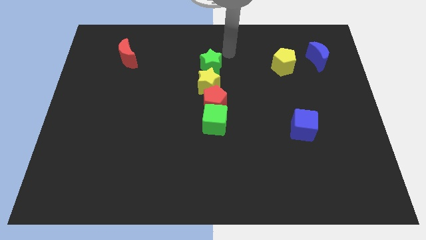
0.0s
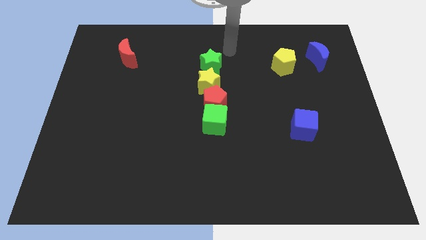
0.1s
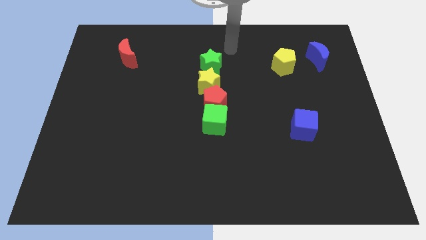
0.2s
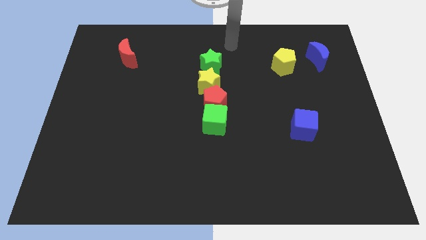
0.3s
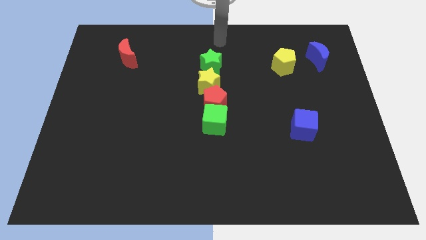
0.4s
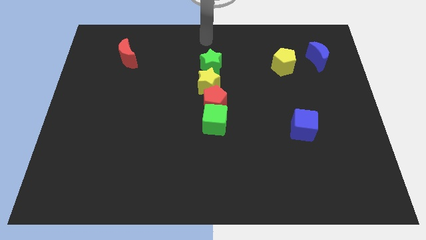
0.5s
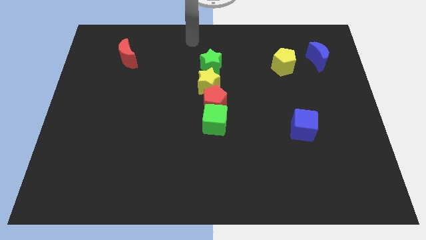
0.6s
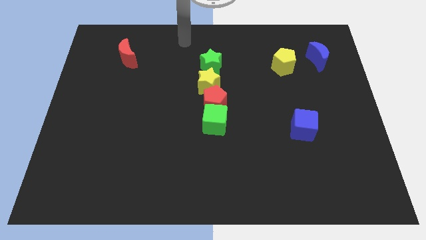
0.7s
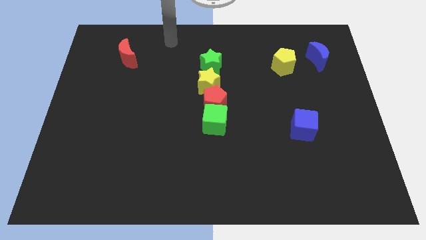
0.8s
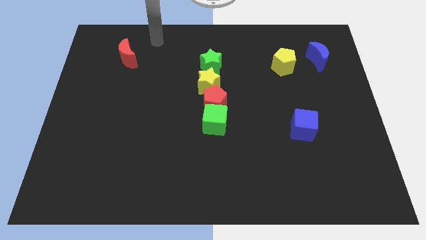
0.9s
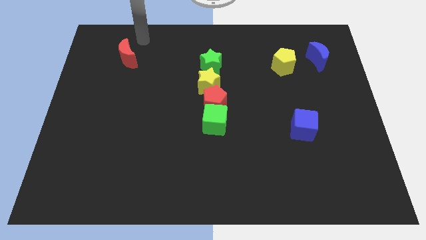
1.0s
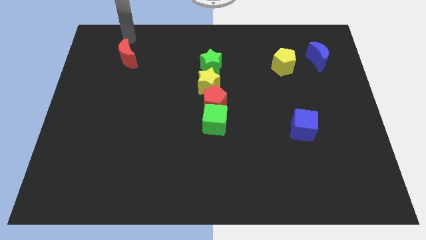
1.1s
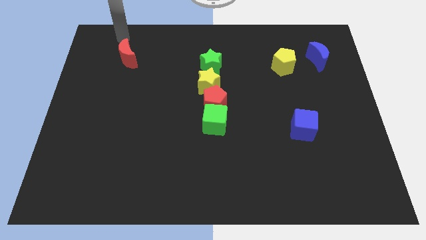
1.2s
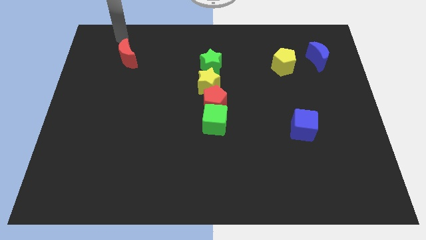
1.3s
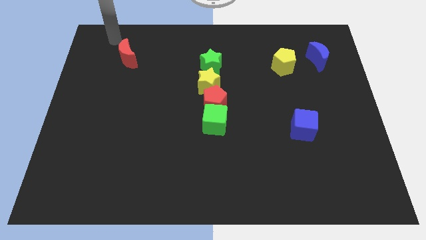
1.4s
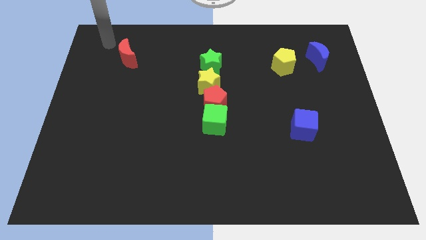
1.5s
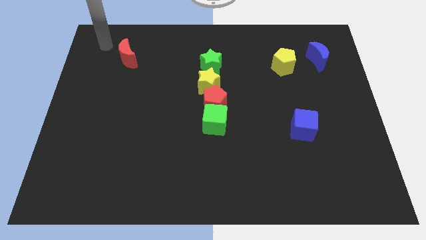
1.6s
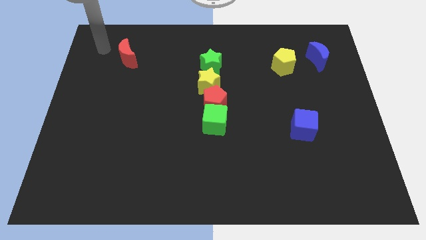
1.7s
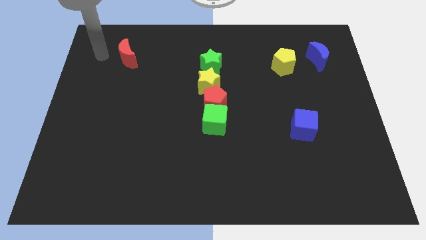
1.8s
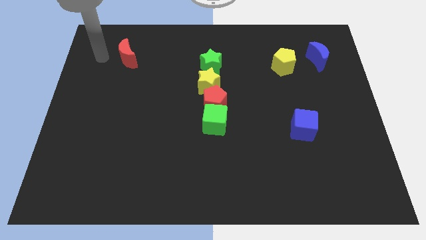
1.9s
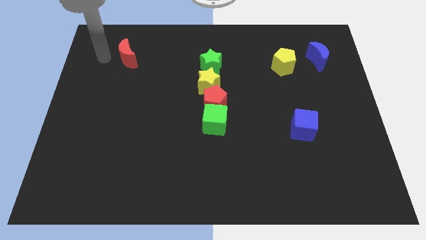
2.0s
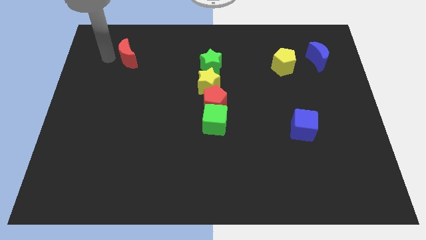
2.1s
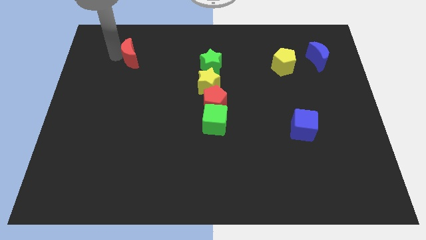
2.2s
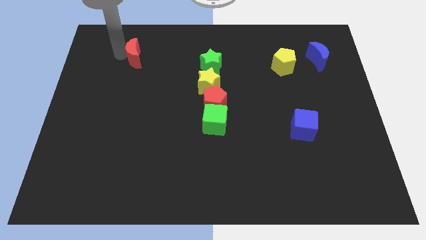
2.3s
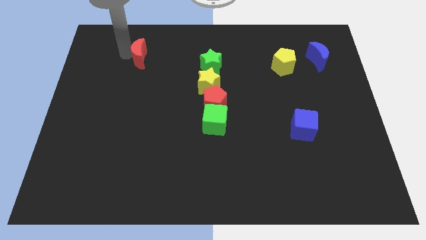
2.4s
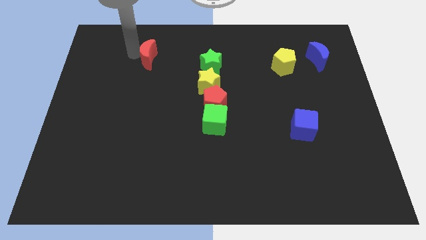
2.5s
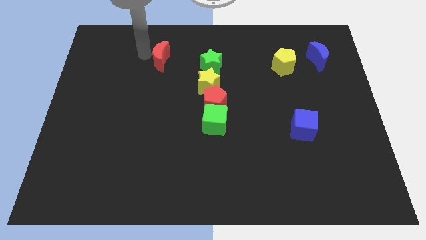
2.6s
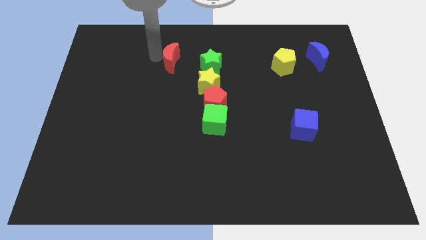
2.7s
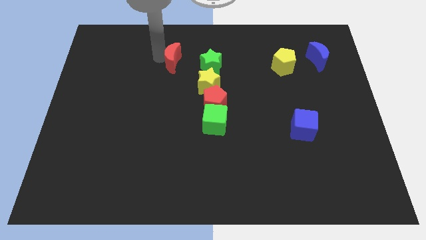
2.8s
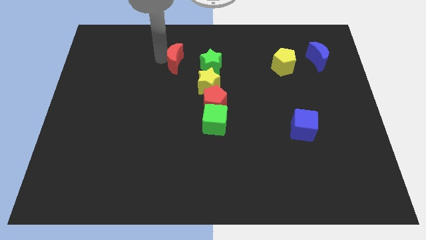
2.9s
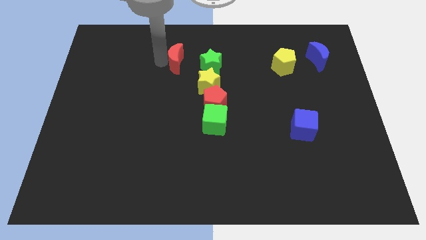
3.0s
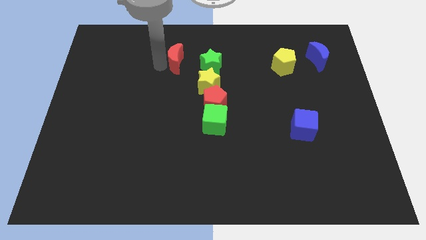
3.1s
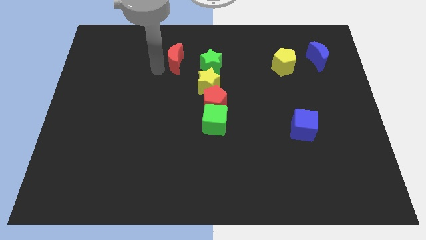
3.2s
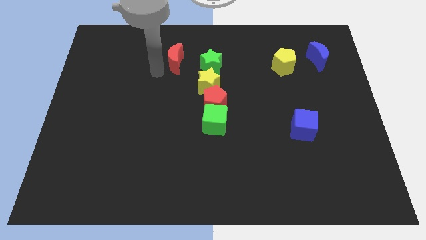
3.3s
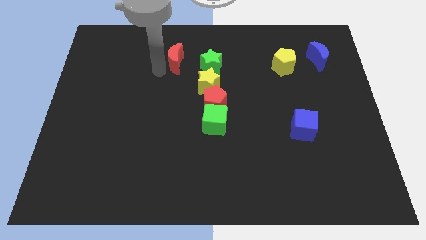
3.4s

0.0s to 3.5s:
push the red moon closer to the green star

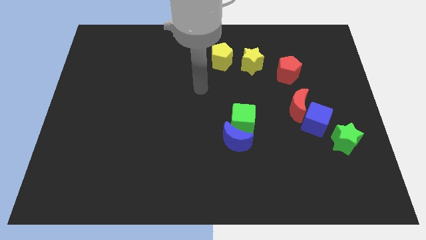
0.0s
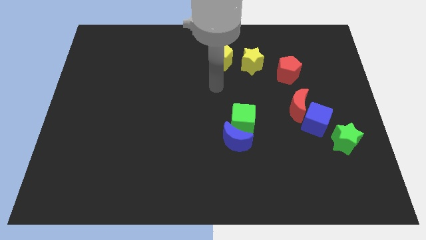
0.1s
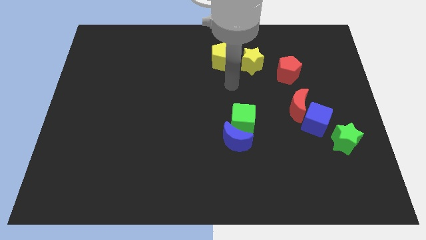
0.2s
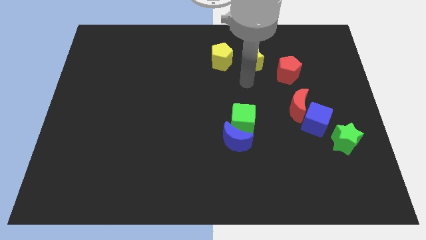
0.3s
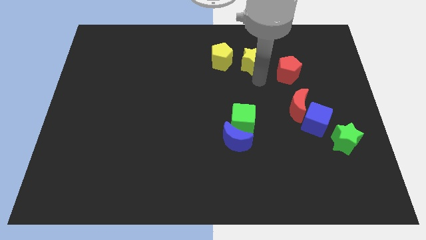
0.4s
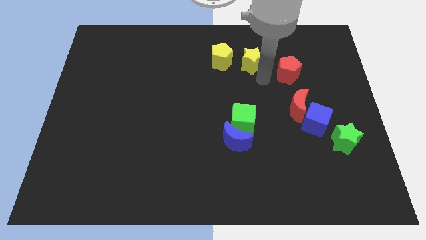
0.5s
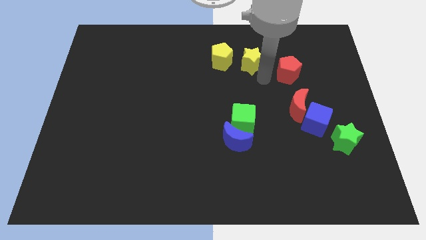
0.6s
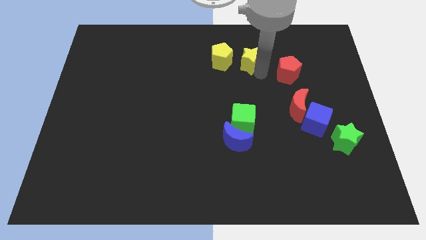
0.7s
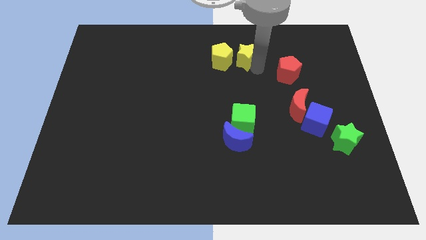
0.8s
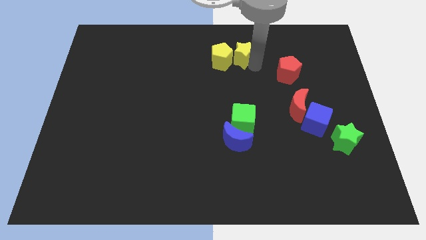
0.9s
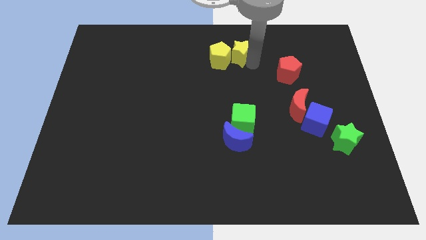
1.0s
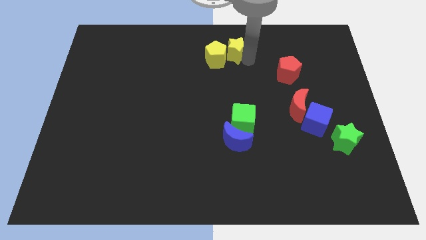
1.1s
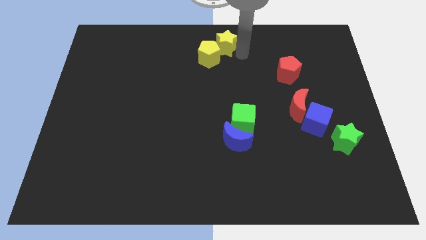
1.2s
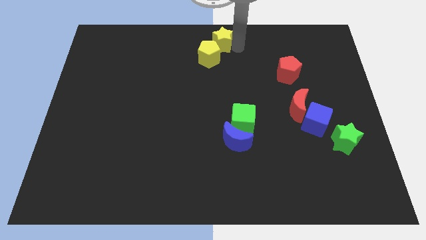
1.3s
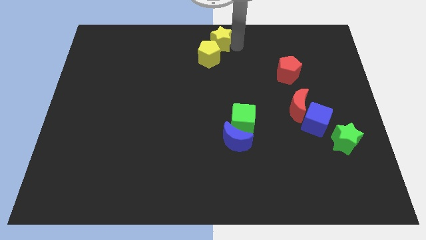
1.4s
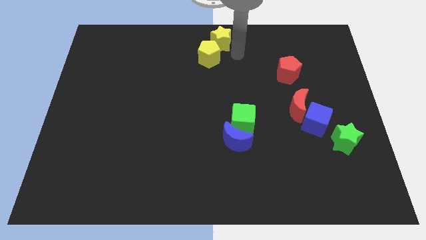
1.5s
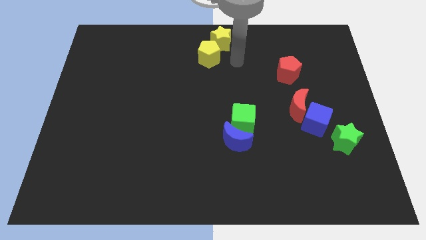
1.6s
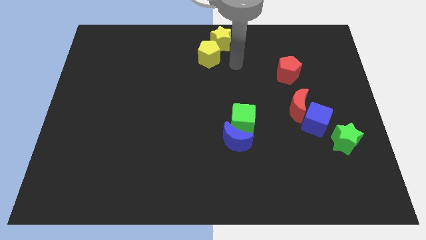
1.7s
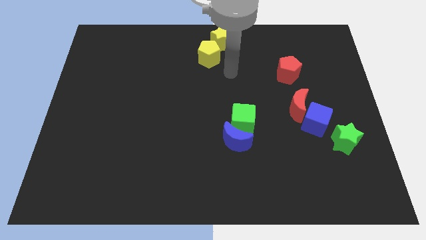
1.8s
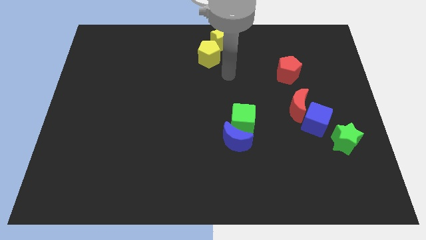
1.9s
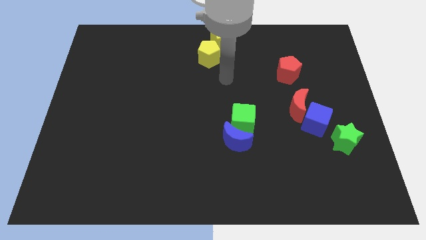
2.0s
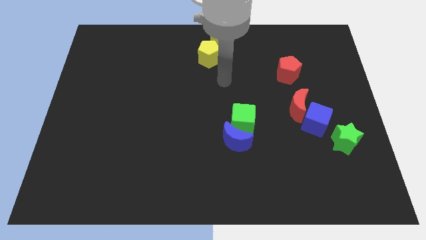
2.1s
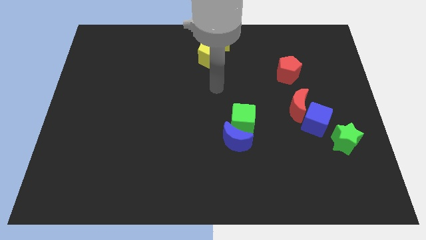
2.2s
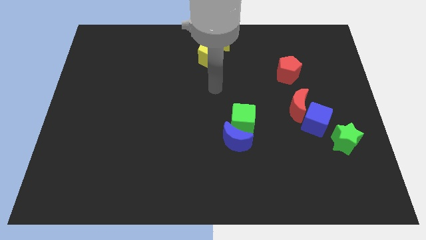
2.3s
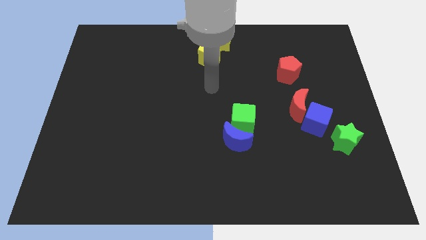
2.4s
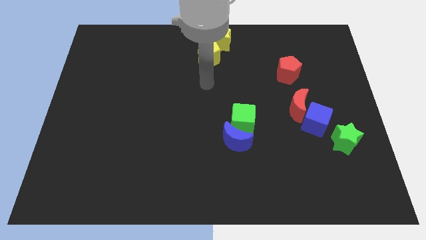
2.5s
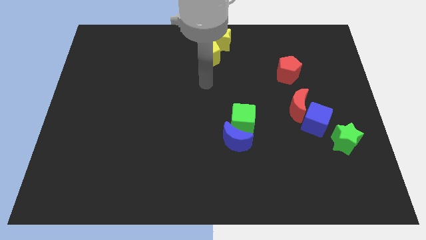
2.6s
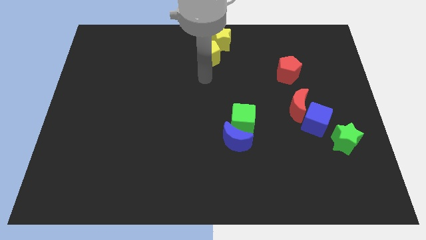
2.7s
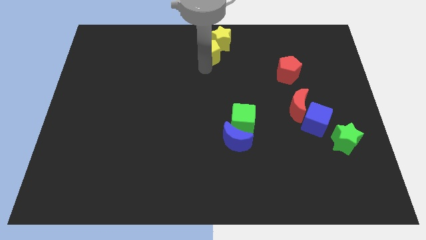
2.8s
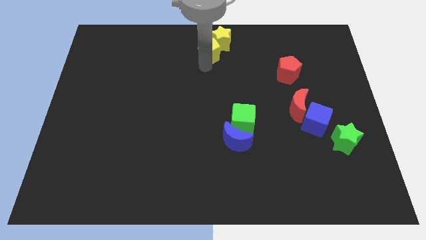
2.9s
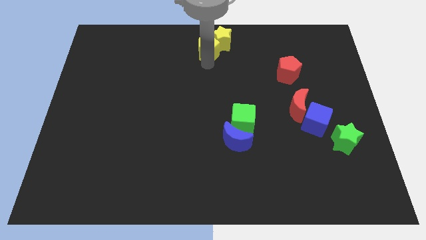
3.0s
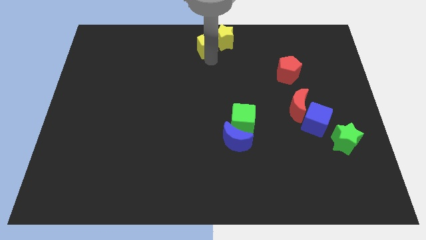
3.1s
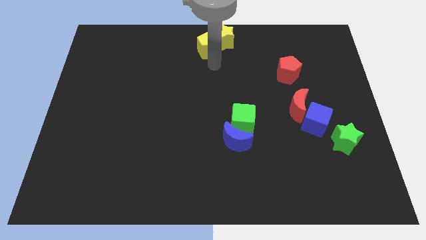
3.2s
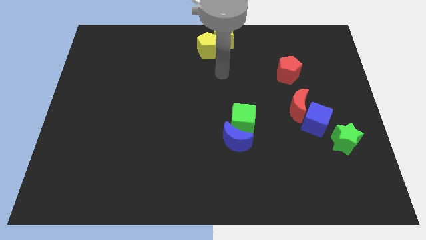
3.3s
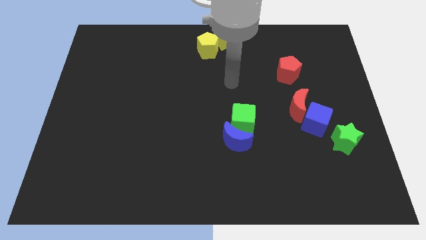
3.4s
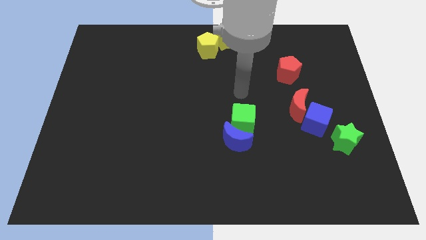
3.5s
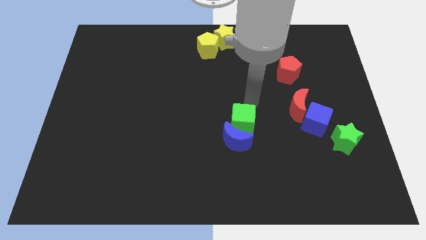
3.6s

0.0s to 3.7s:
push the yellow star and yellow pentagon to the top center of the board

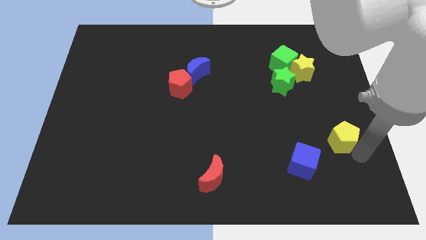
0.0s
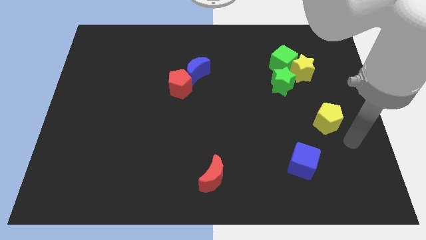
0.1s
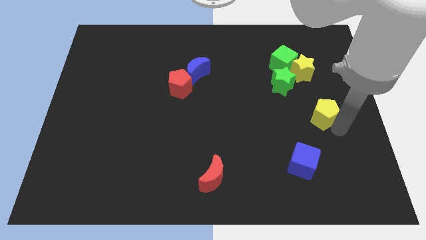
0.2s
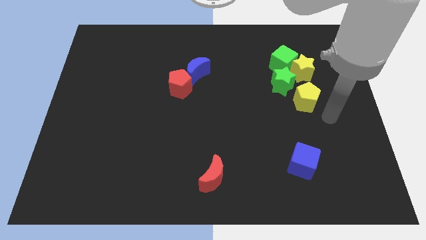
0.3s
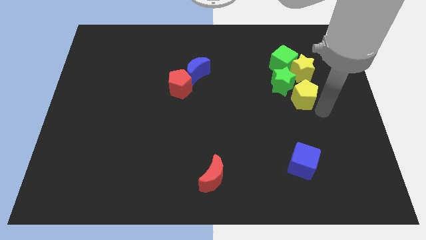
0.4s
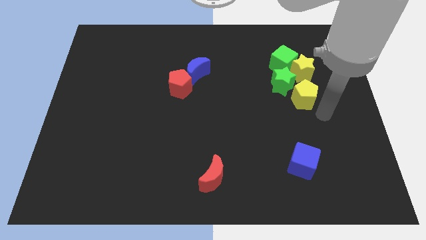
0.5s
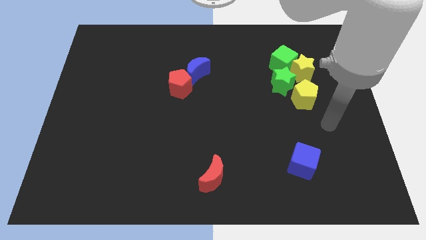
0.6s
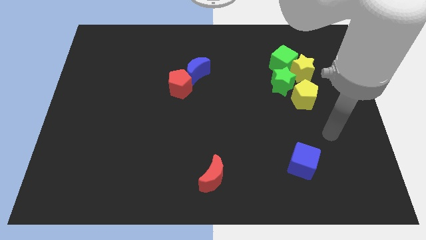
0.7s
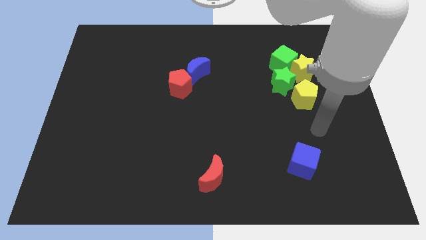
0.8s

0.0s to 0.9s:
place the yellow pentagon diagonally top left to the green star

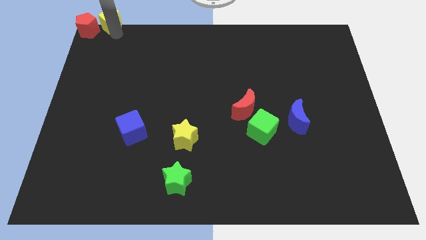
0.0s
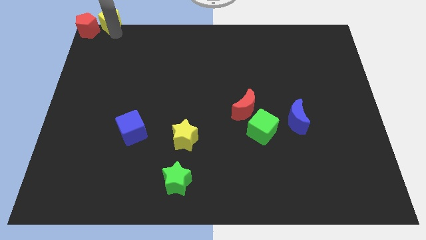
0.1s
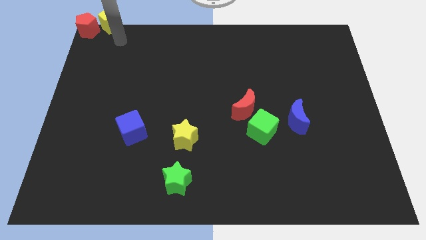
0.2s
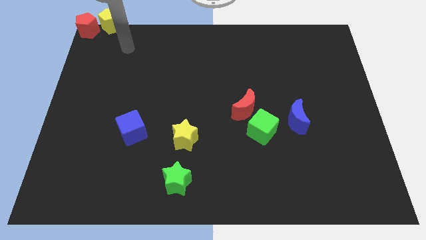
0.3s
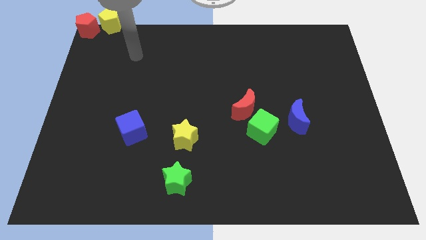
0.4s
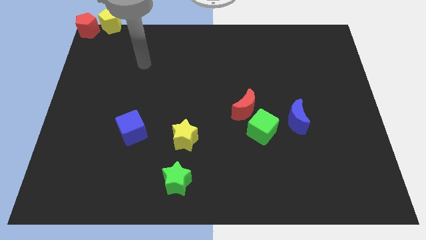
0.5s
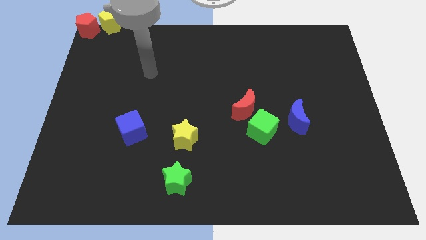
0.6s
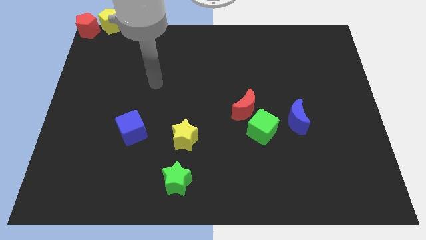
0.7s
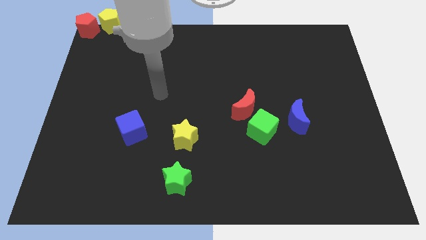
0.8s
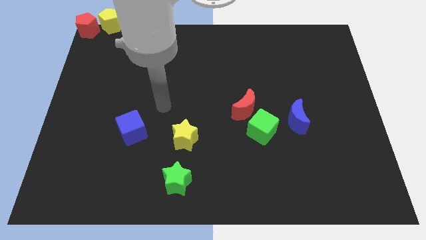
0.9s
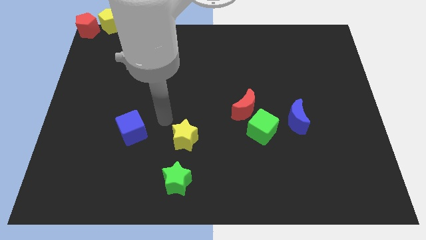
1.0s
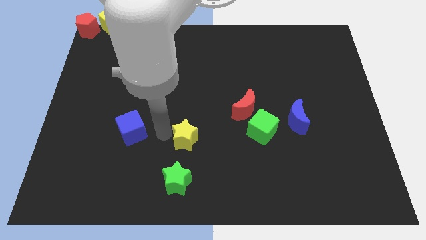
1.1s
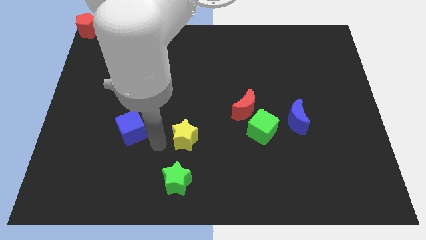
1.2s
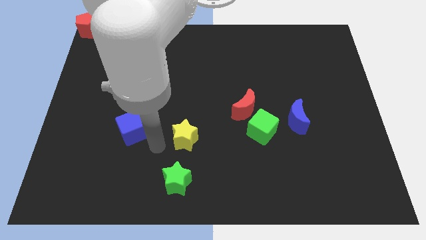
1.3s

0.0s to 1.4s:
move the arm away from the yellow pentagon
